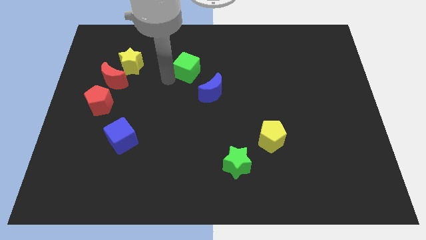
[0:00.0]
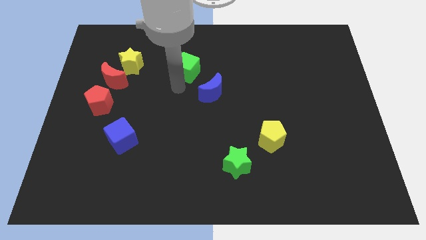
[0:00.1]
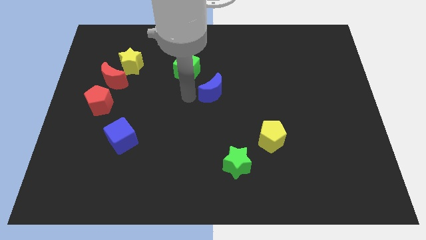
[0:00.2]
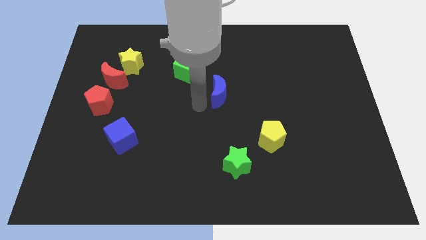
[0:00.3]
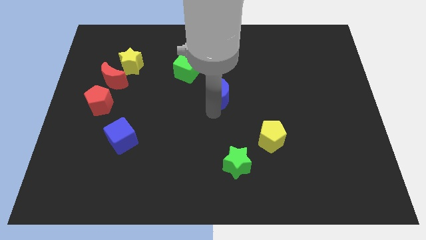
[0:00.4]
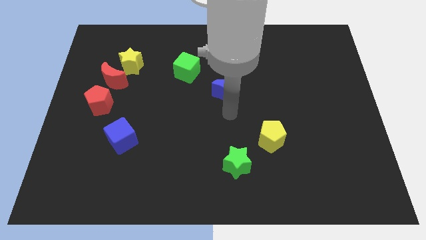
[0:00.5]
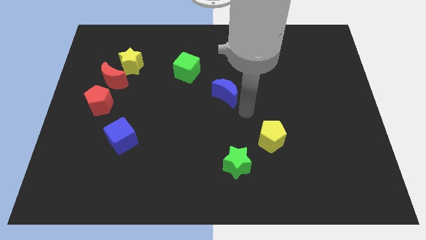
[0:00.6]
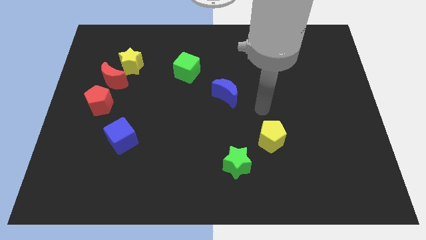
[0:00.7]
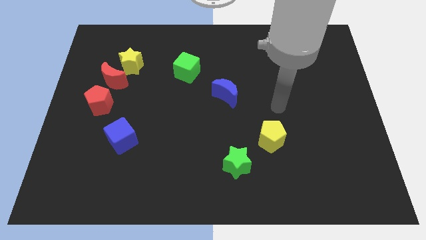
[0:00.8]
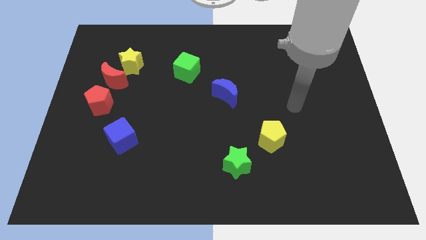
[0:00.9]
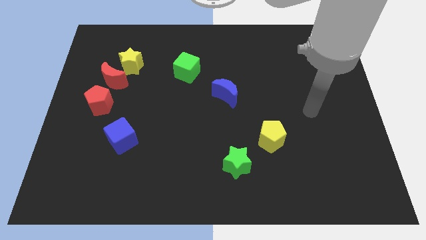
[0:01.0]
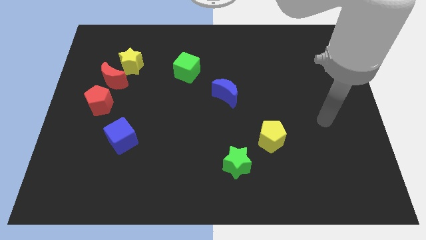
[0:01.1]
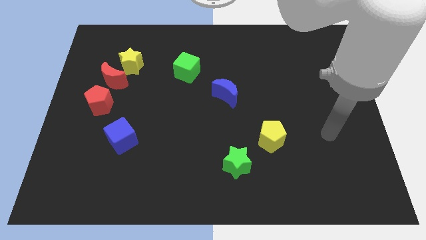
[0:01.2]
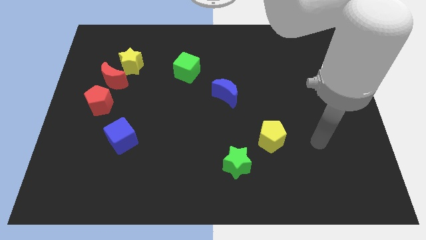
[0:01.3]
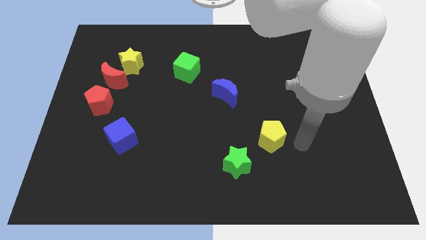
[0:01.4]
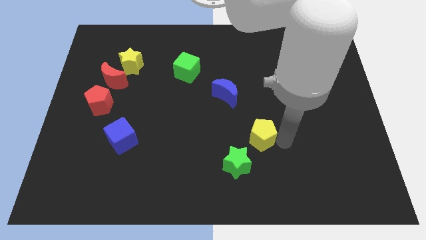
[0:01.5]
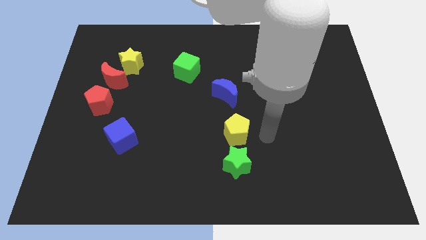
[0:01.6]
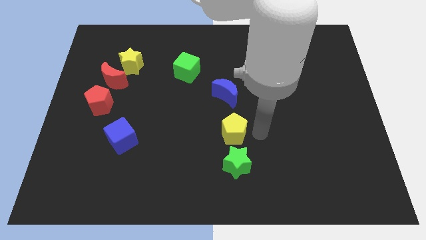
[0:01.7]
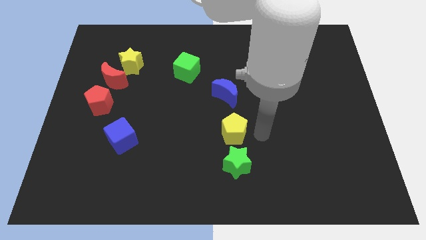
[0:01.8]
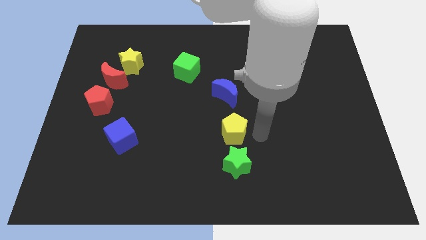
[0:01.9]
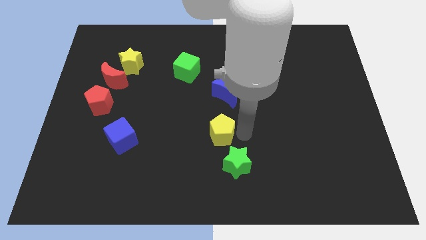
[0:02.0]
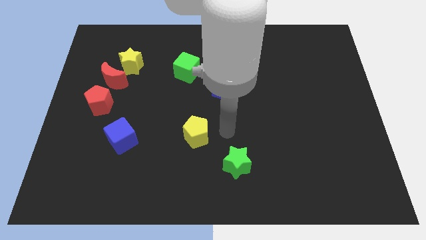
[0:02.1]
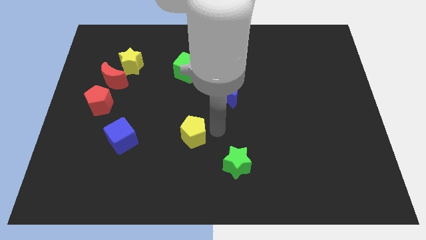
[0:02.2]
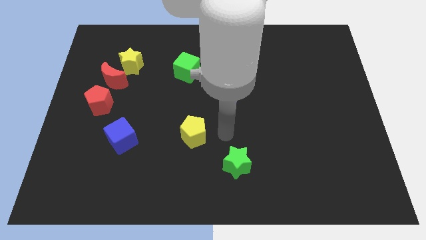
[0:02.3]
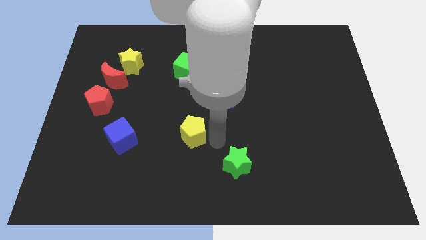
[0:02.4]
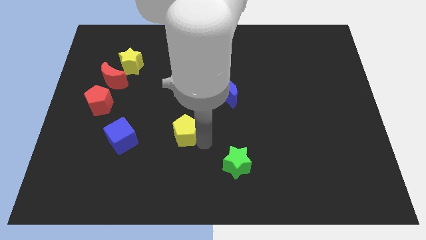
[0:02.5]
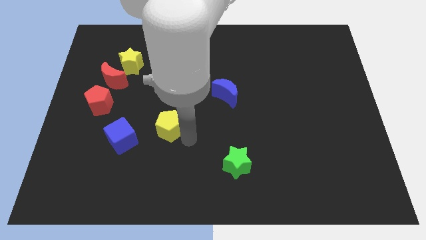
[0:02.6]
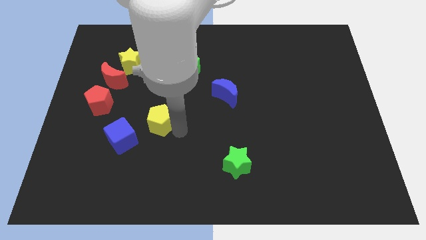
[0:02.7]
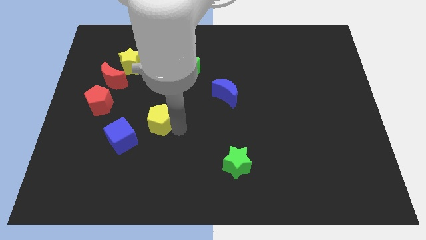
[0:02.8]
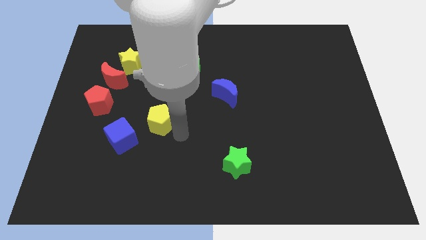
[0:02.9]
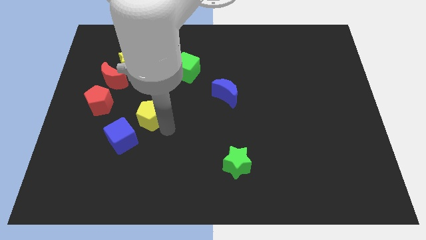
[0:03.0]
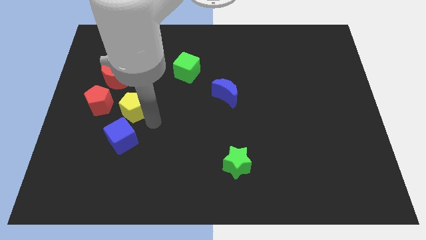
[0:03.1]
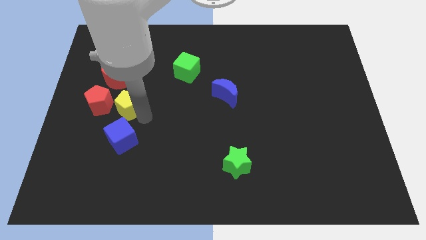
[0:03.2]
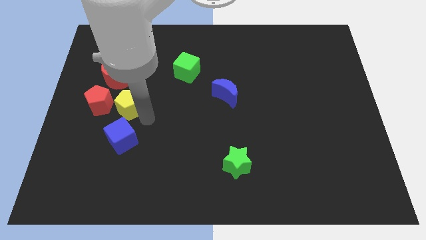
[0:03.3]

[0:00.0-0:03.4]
place the yellow pentagon at the top side of the blue cube

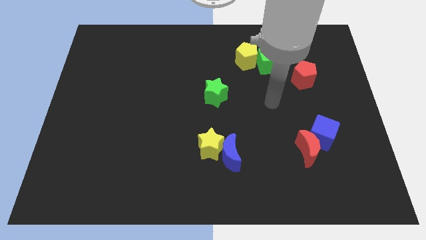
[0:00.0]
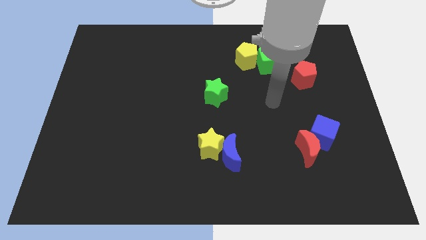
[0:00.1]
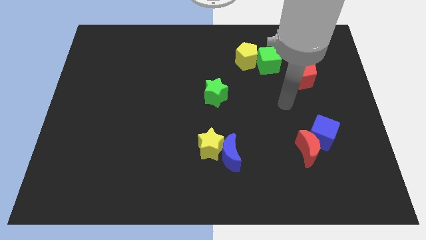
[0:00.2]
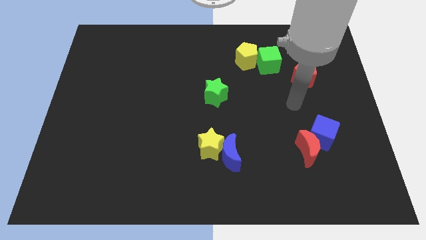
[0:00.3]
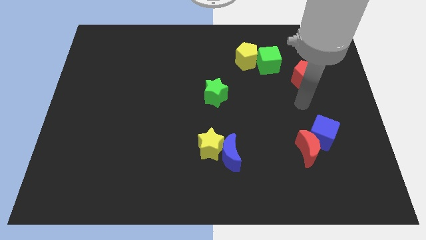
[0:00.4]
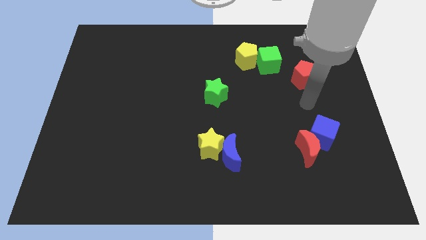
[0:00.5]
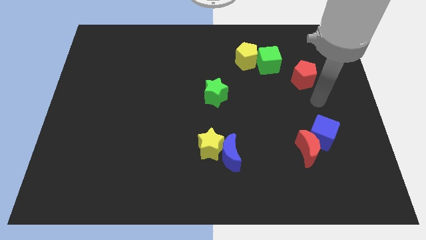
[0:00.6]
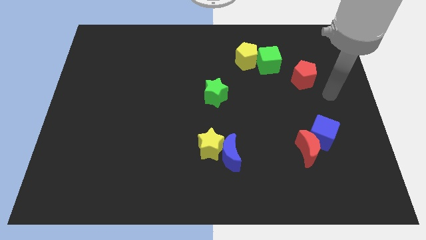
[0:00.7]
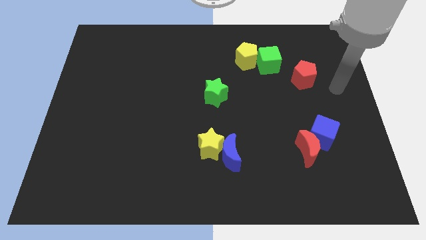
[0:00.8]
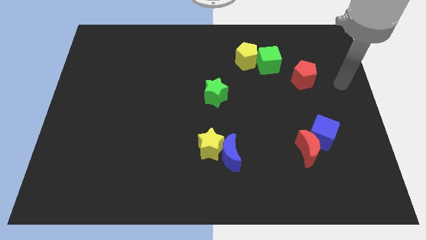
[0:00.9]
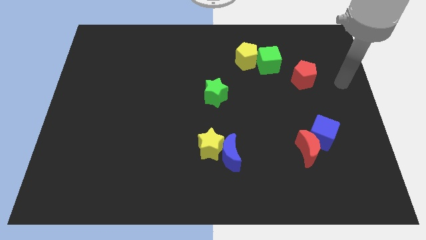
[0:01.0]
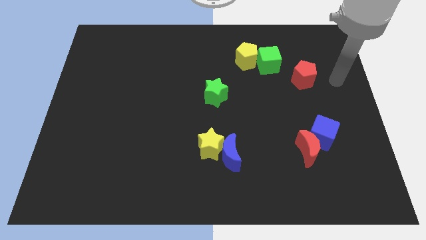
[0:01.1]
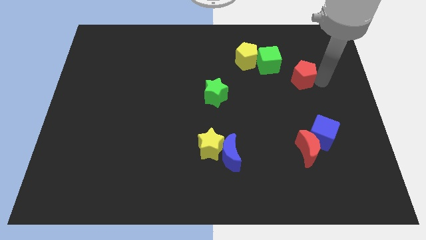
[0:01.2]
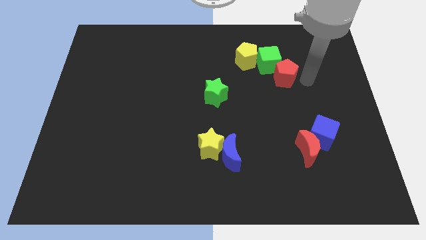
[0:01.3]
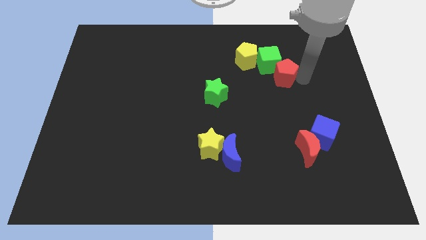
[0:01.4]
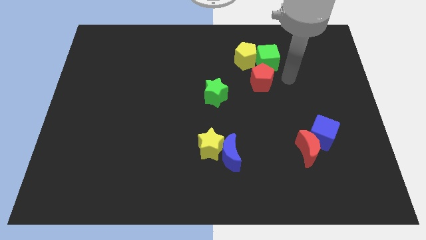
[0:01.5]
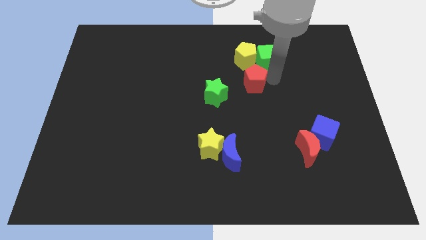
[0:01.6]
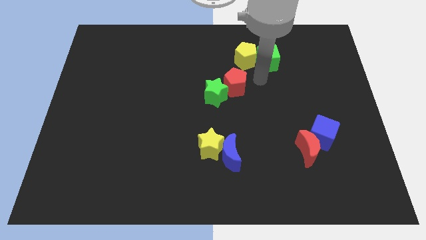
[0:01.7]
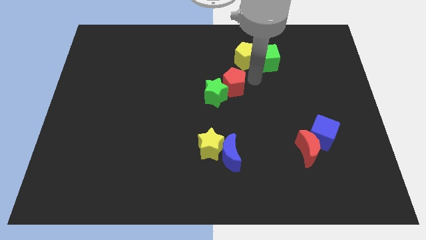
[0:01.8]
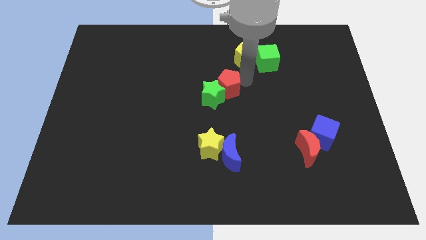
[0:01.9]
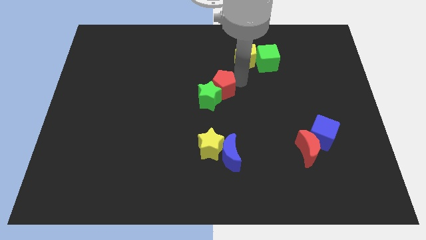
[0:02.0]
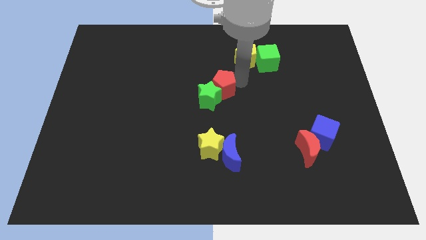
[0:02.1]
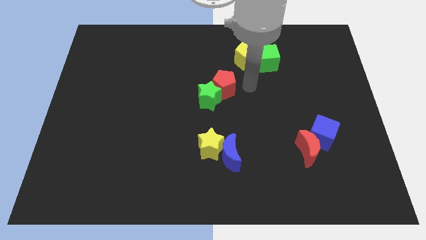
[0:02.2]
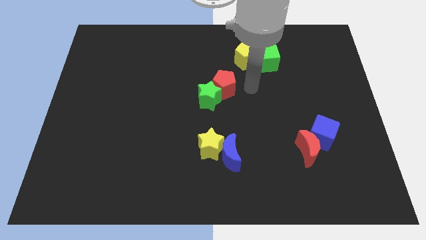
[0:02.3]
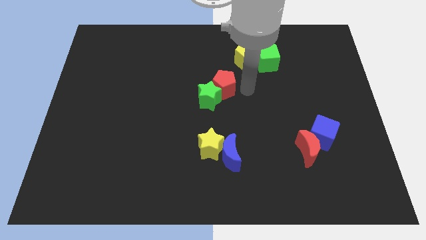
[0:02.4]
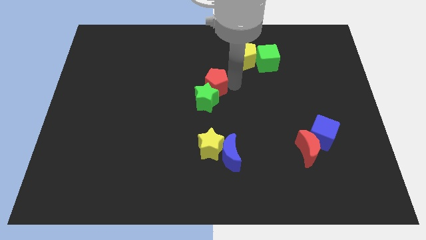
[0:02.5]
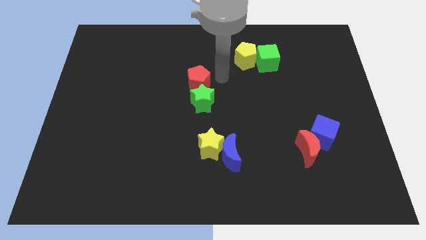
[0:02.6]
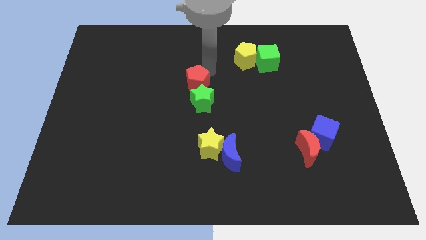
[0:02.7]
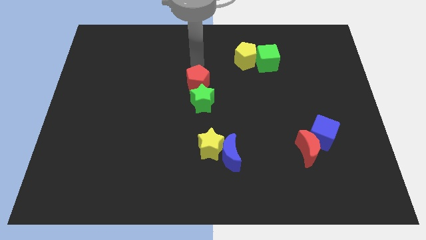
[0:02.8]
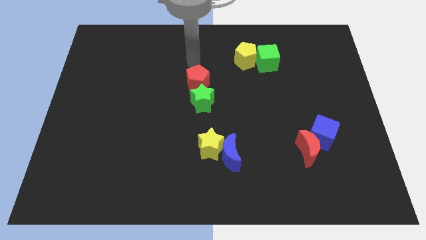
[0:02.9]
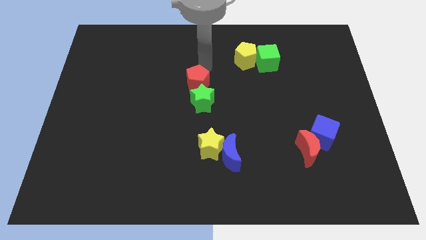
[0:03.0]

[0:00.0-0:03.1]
place the red pentagon above the green star

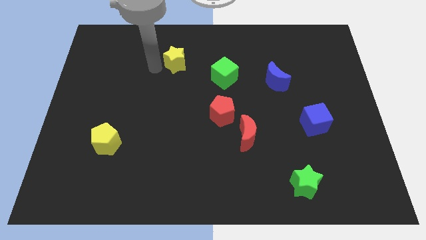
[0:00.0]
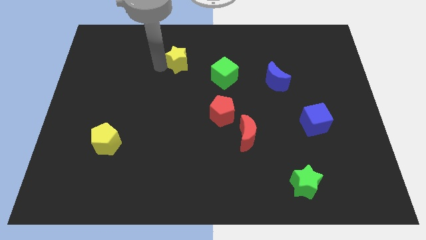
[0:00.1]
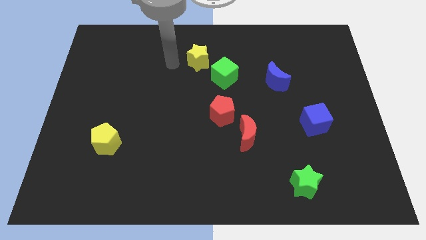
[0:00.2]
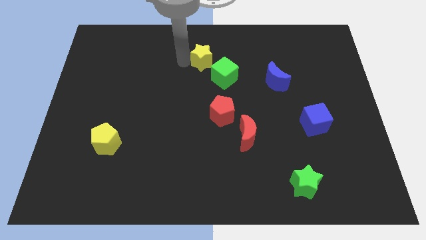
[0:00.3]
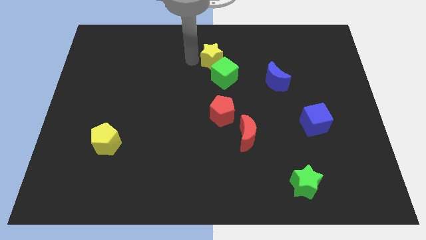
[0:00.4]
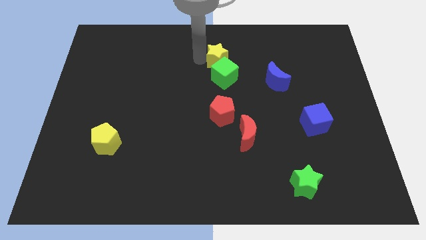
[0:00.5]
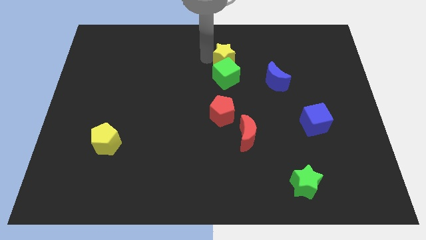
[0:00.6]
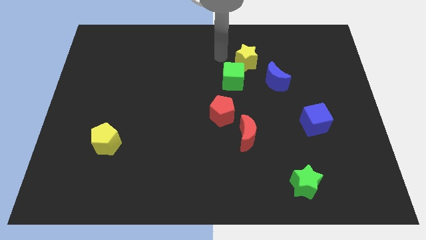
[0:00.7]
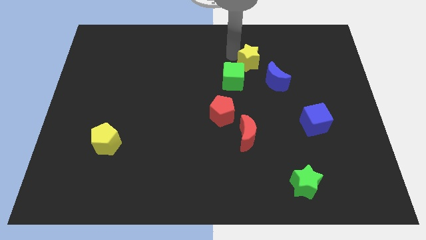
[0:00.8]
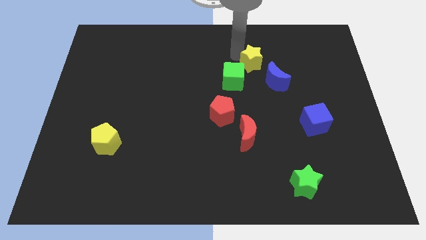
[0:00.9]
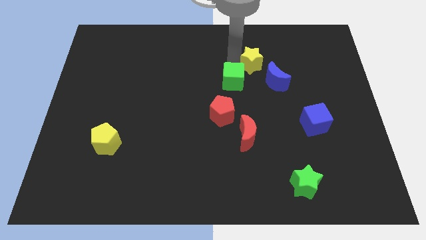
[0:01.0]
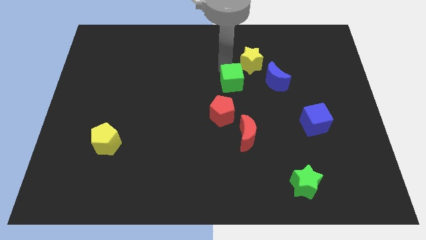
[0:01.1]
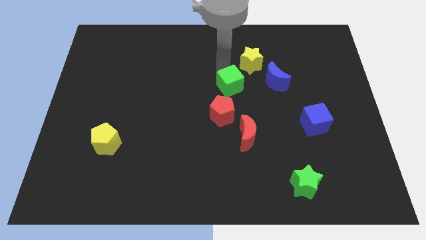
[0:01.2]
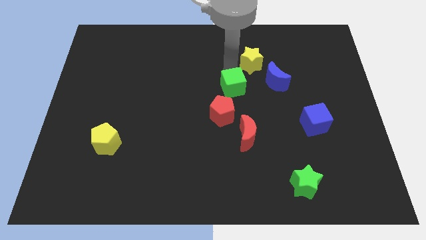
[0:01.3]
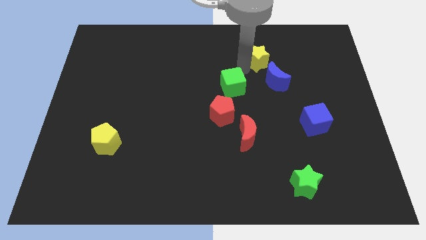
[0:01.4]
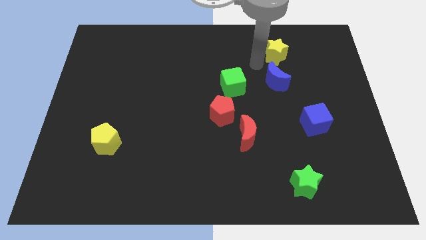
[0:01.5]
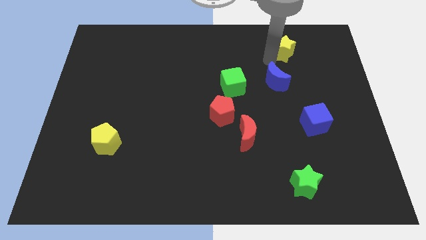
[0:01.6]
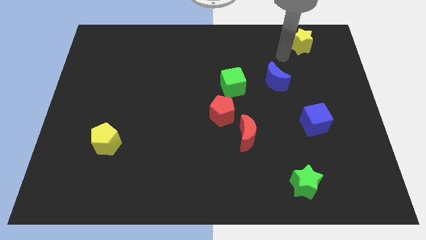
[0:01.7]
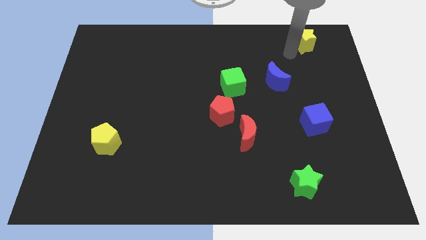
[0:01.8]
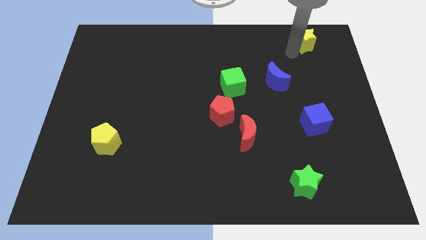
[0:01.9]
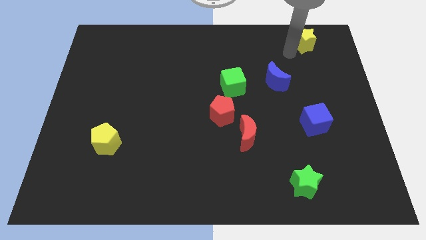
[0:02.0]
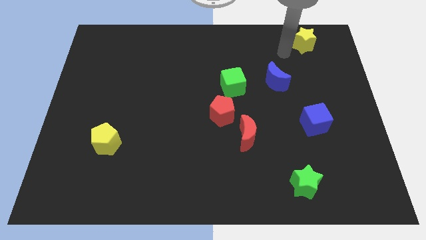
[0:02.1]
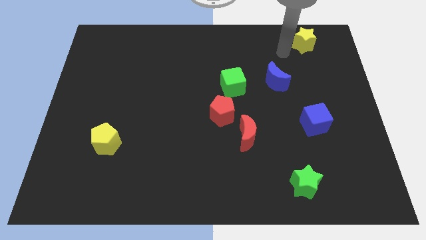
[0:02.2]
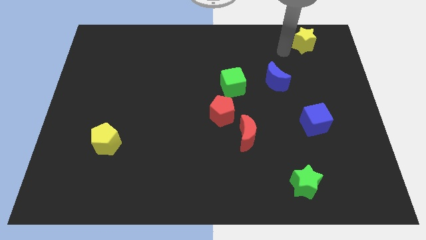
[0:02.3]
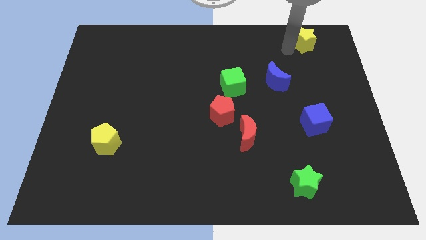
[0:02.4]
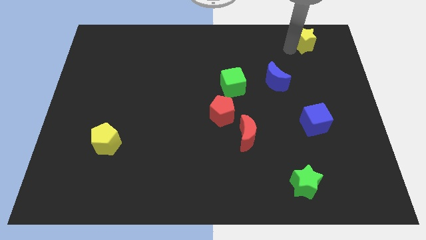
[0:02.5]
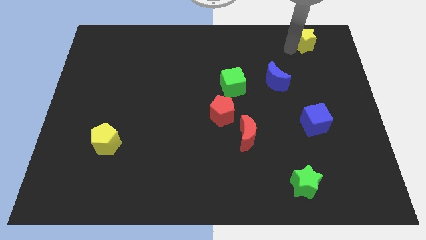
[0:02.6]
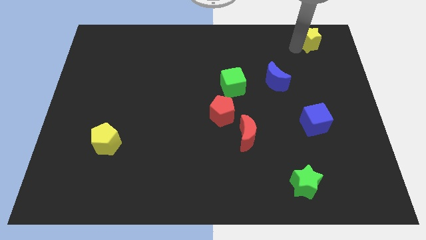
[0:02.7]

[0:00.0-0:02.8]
move the yellow star towards the top right of the board
